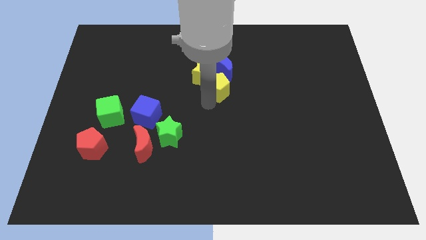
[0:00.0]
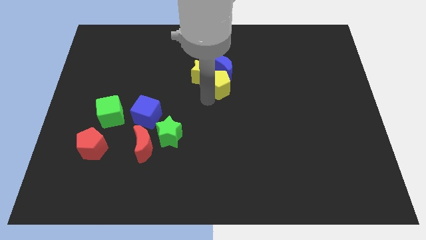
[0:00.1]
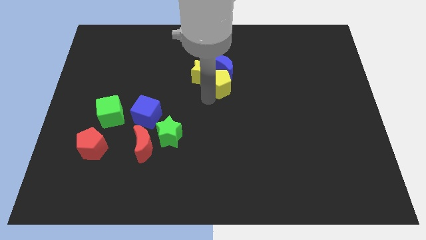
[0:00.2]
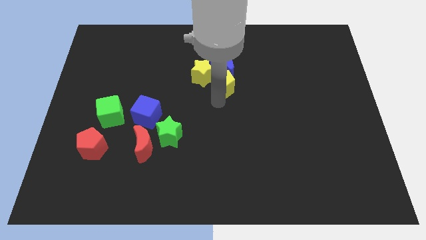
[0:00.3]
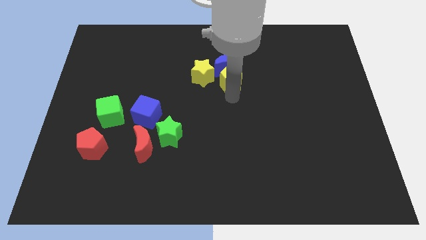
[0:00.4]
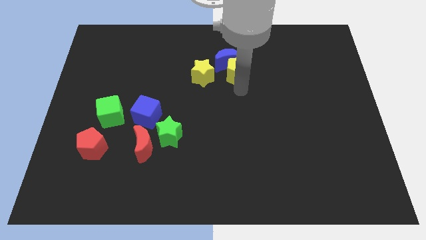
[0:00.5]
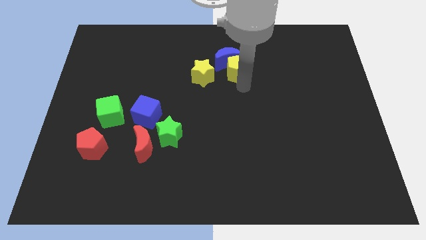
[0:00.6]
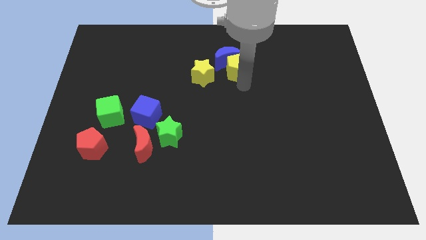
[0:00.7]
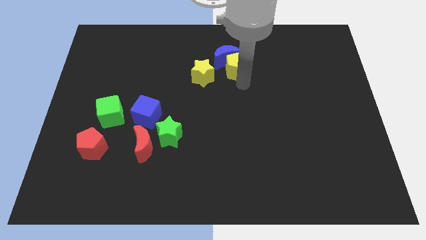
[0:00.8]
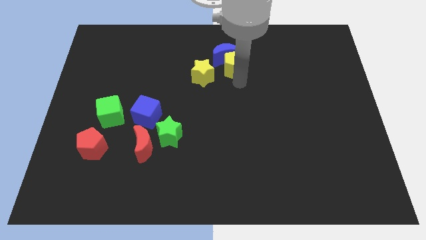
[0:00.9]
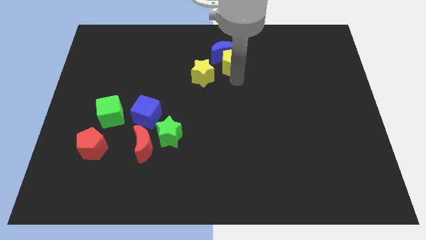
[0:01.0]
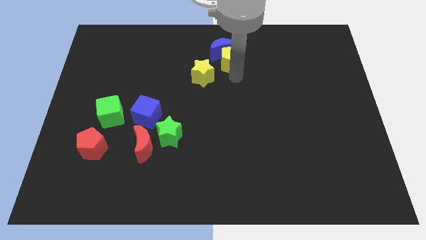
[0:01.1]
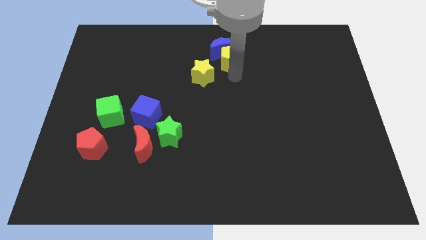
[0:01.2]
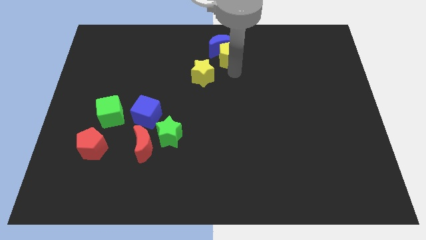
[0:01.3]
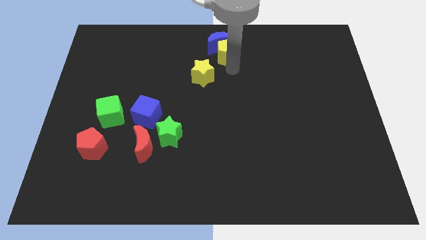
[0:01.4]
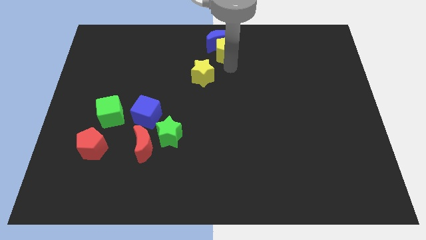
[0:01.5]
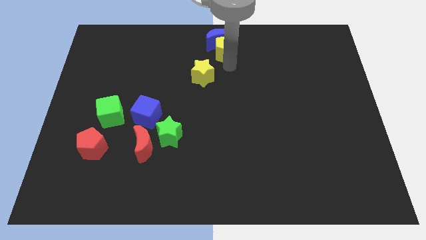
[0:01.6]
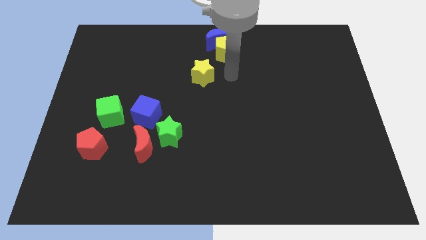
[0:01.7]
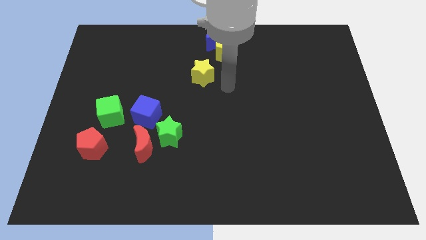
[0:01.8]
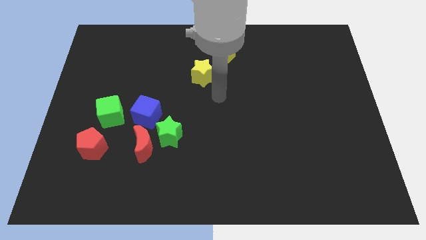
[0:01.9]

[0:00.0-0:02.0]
push the blue moon to the top center with yellow pentagon

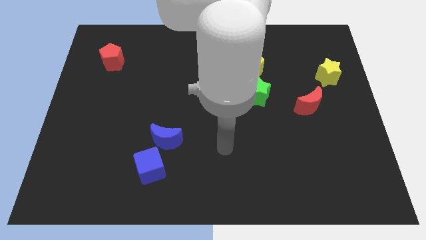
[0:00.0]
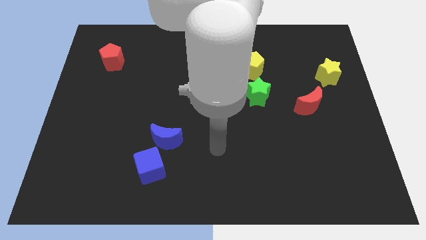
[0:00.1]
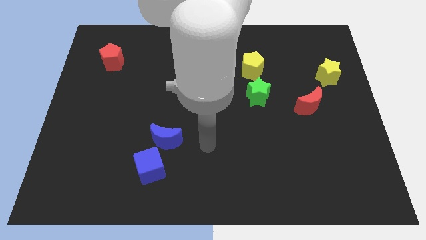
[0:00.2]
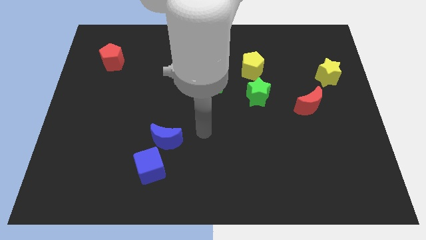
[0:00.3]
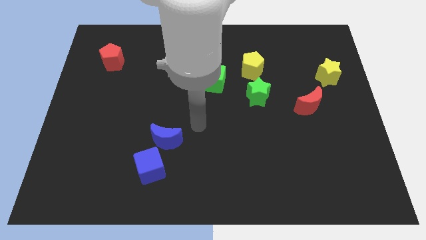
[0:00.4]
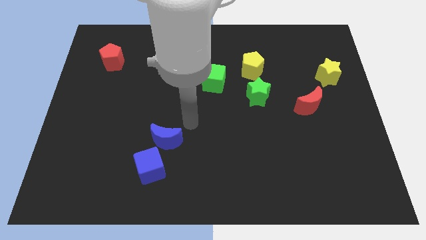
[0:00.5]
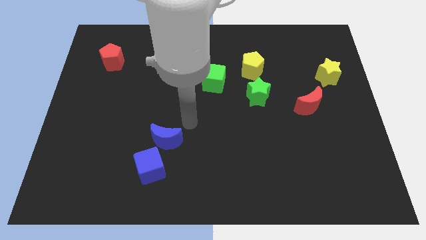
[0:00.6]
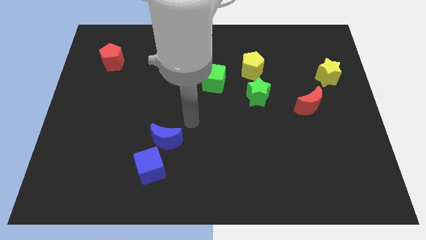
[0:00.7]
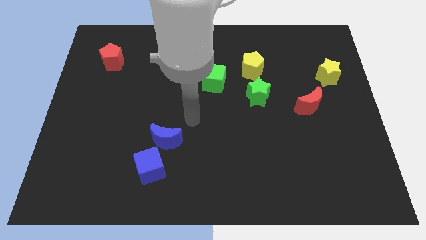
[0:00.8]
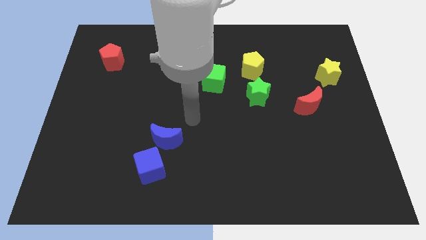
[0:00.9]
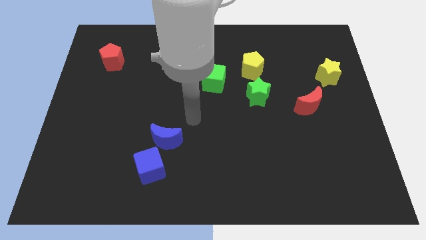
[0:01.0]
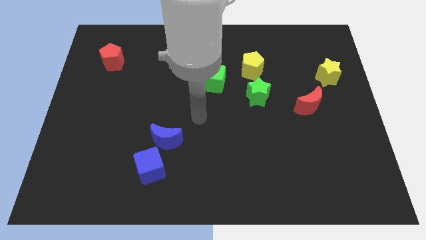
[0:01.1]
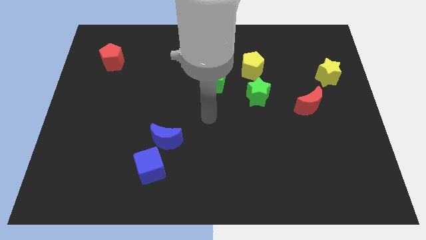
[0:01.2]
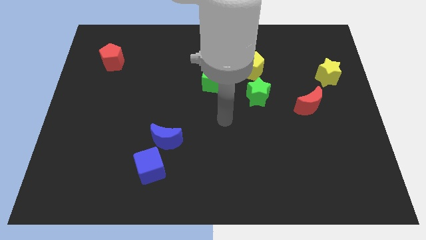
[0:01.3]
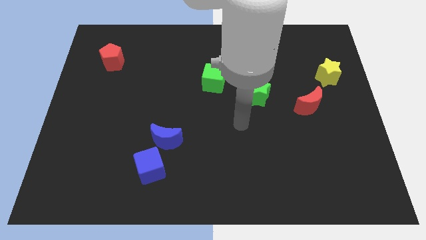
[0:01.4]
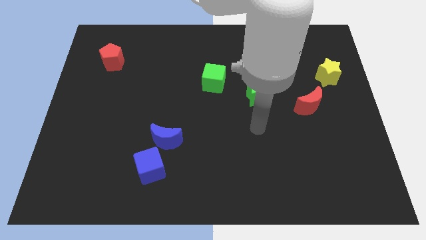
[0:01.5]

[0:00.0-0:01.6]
point your arm at the bottom of the green star

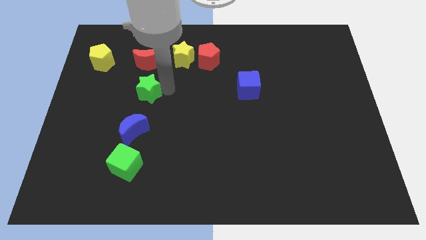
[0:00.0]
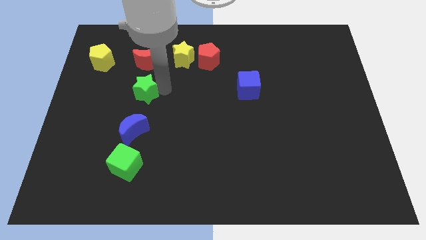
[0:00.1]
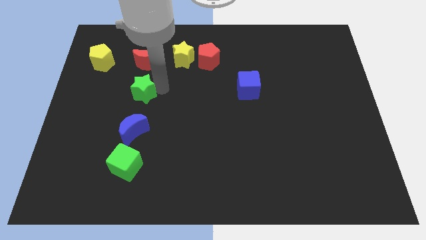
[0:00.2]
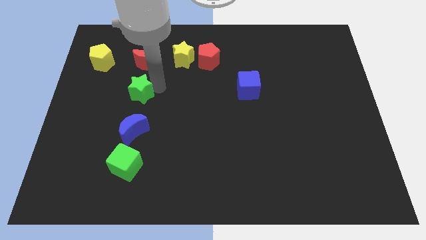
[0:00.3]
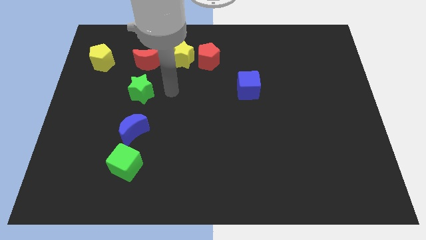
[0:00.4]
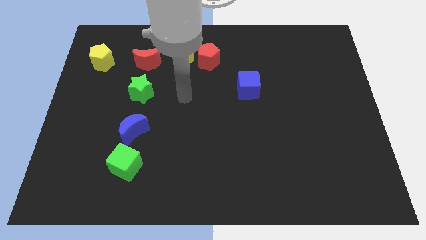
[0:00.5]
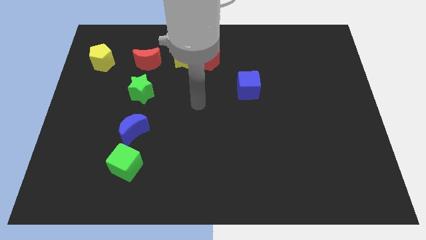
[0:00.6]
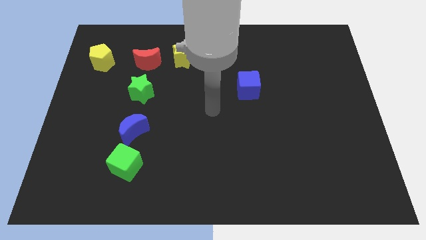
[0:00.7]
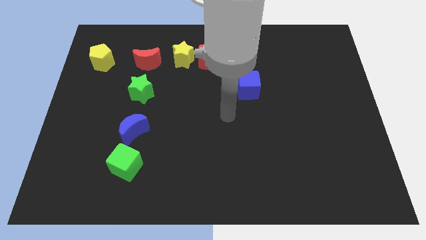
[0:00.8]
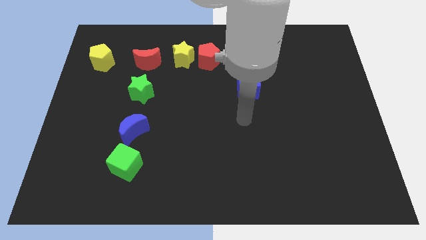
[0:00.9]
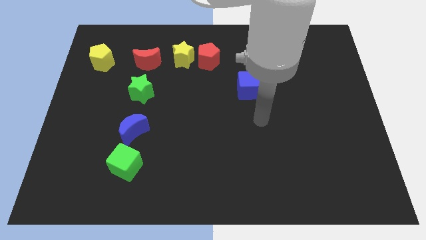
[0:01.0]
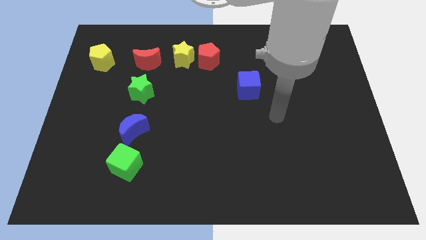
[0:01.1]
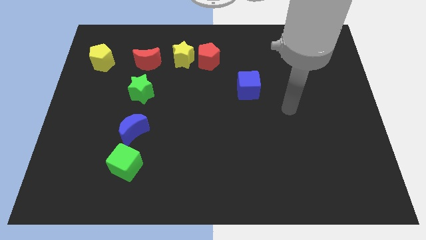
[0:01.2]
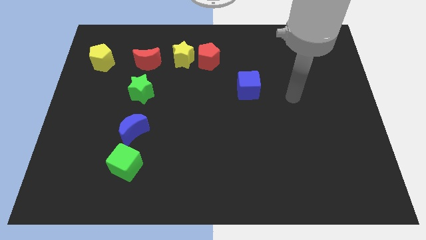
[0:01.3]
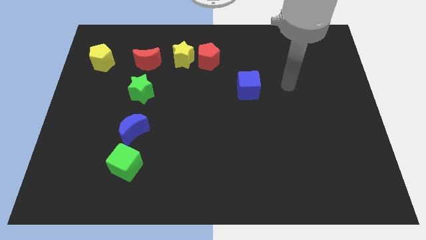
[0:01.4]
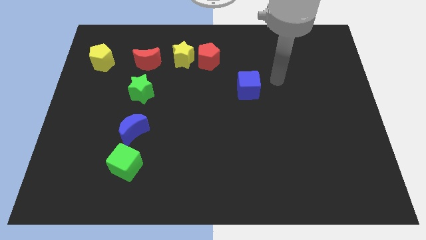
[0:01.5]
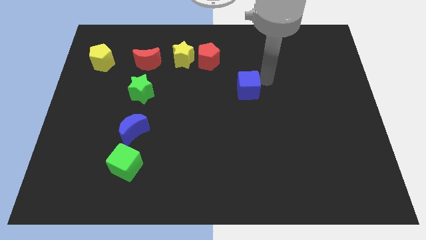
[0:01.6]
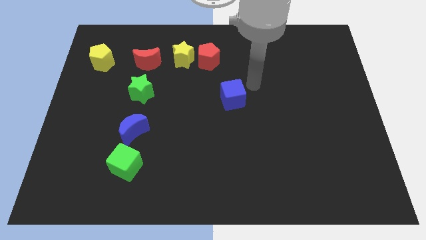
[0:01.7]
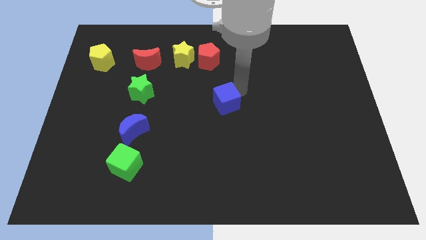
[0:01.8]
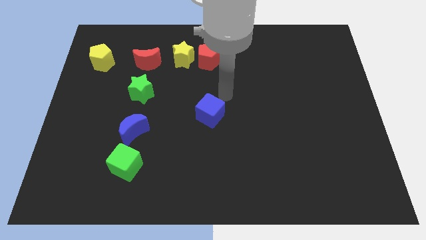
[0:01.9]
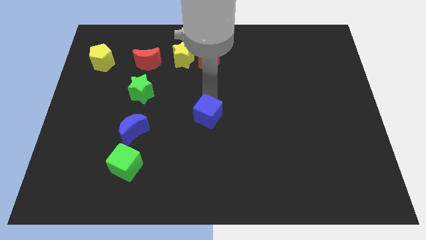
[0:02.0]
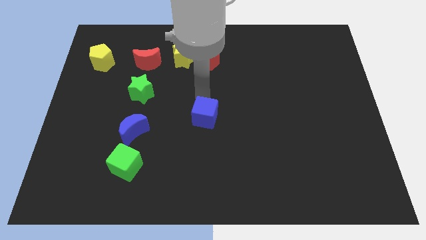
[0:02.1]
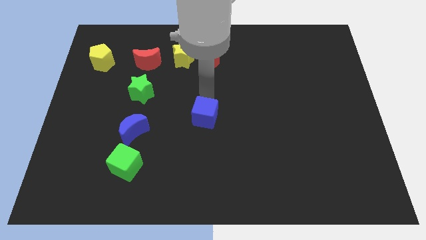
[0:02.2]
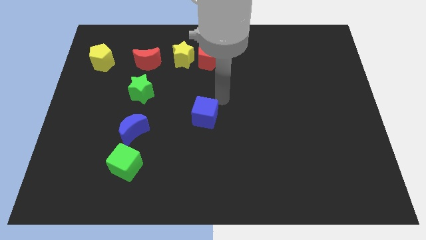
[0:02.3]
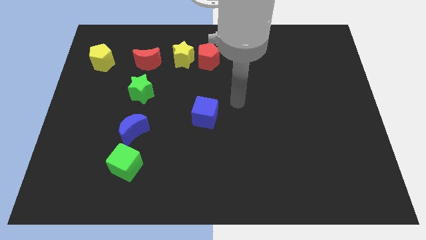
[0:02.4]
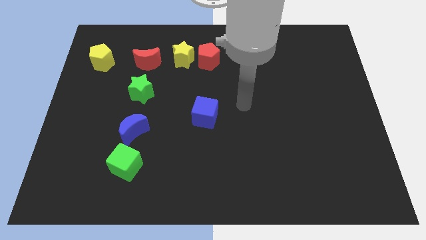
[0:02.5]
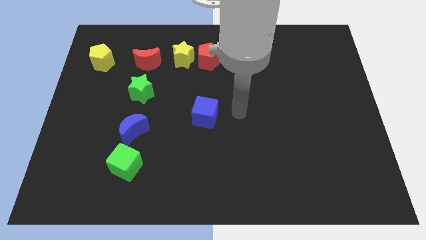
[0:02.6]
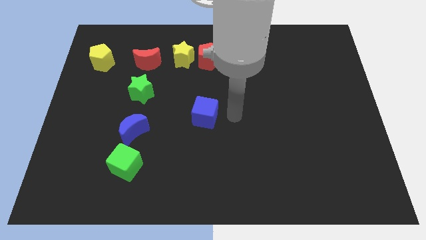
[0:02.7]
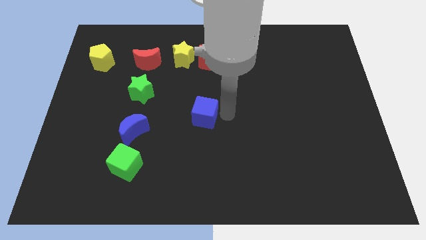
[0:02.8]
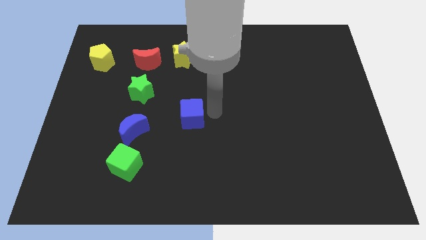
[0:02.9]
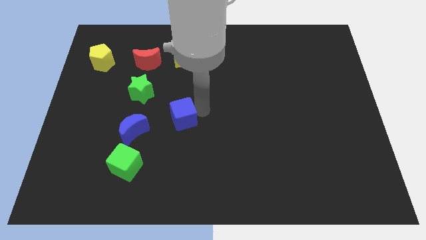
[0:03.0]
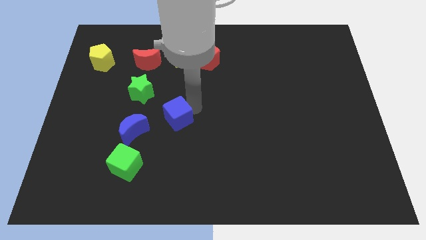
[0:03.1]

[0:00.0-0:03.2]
drag the blue cube towards the blue moon

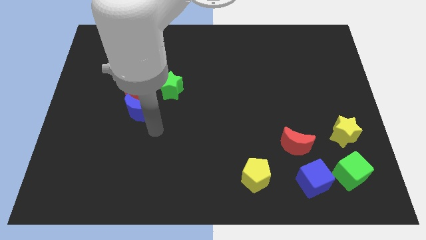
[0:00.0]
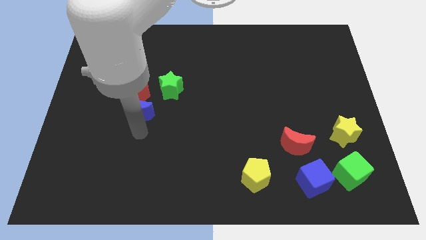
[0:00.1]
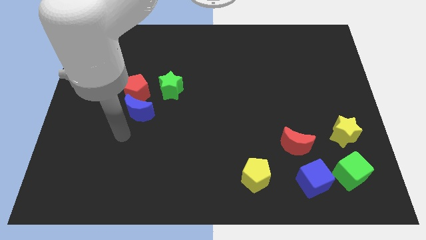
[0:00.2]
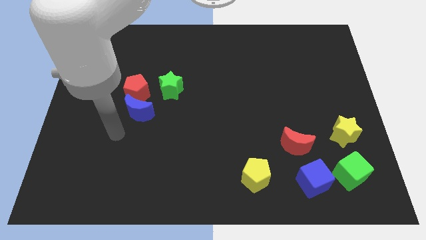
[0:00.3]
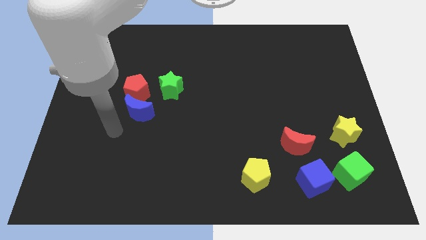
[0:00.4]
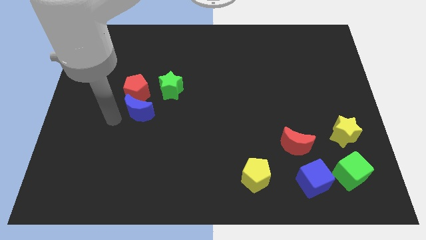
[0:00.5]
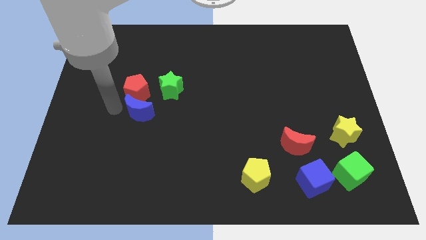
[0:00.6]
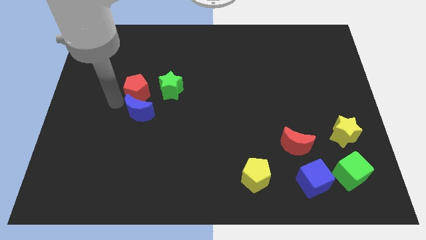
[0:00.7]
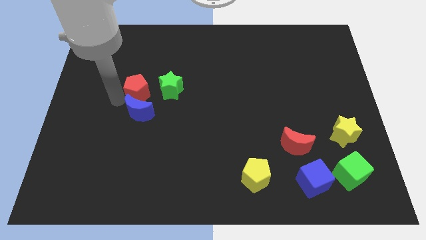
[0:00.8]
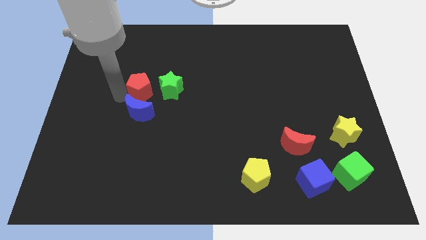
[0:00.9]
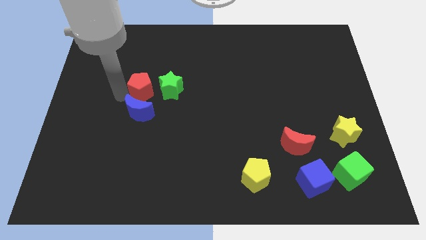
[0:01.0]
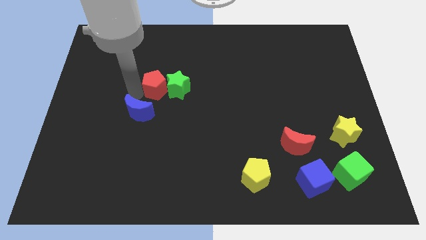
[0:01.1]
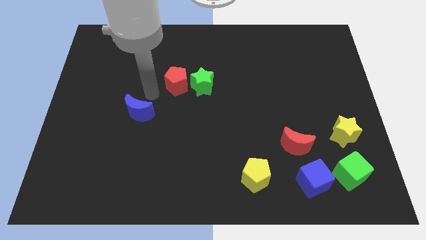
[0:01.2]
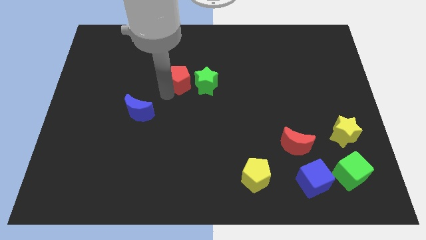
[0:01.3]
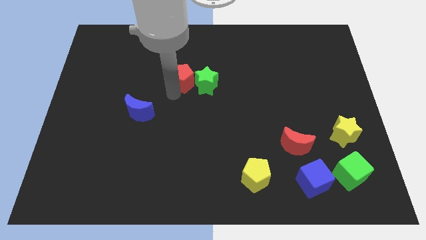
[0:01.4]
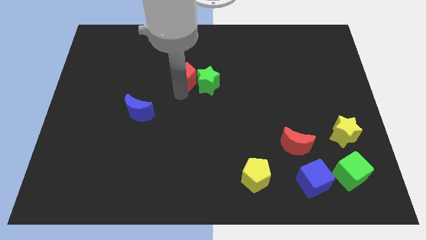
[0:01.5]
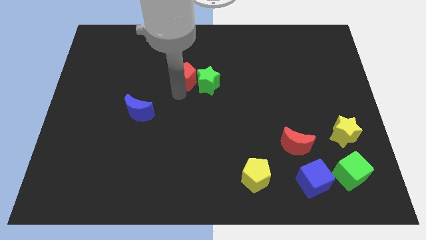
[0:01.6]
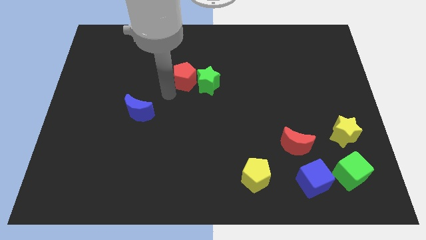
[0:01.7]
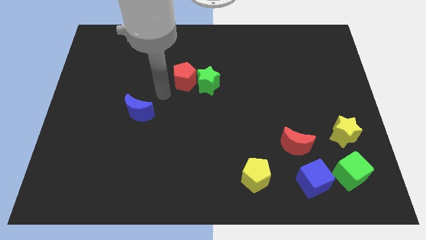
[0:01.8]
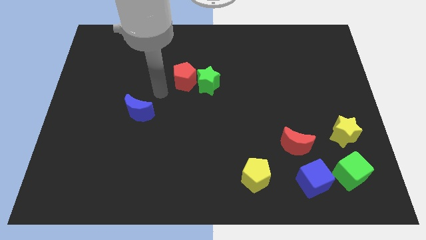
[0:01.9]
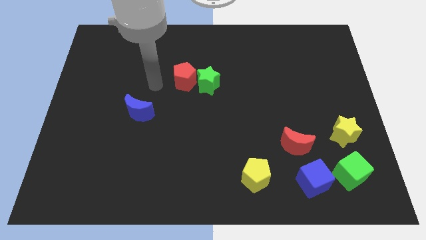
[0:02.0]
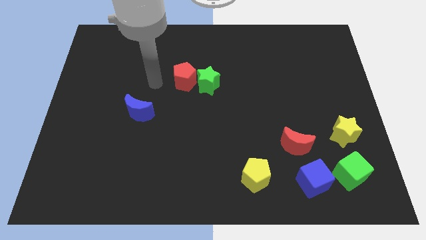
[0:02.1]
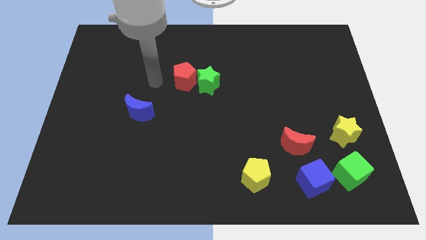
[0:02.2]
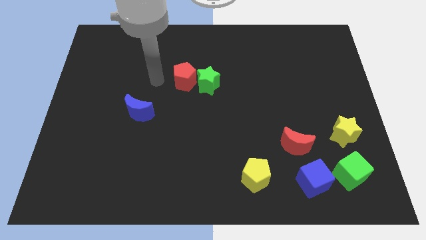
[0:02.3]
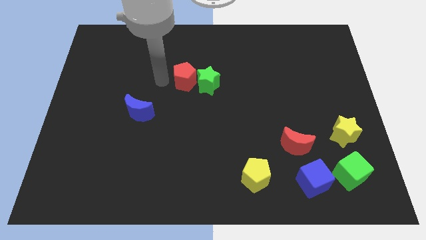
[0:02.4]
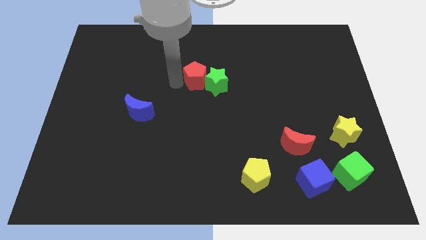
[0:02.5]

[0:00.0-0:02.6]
push the red pentagon into the green star
